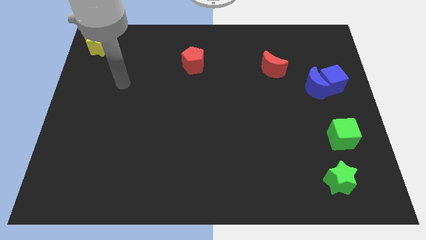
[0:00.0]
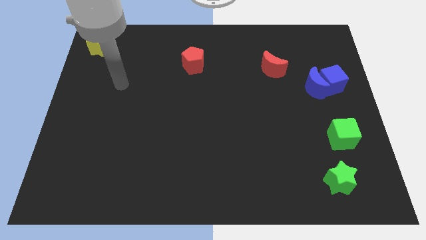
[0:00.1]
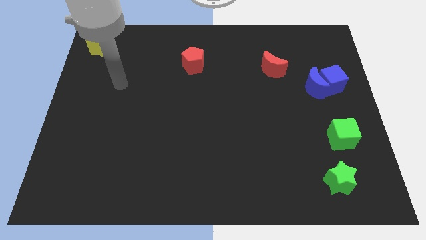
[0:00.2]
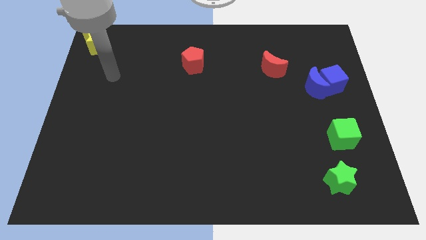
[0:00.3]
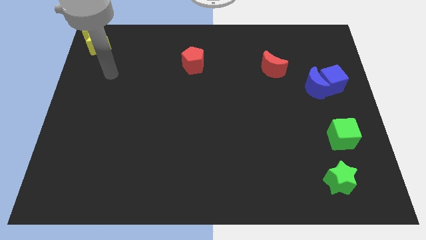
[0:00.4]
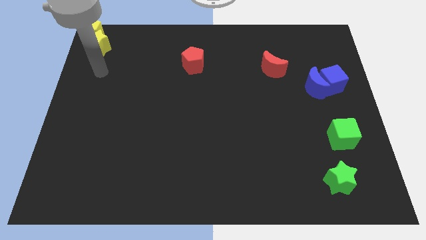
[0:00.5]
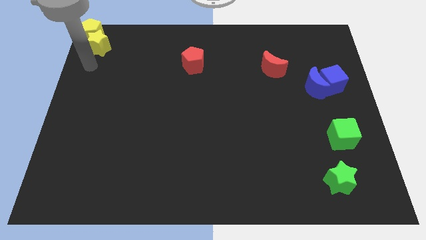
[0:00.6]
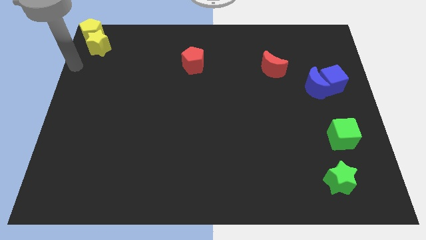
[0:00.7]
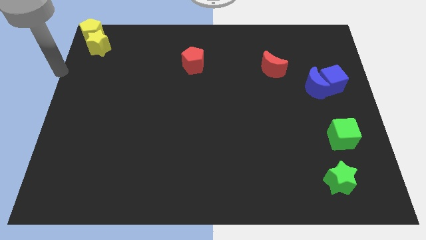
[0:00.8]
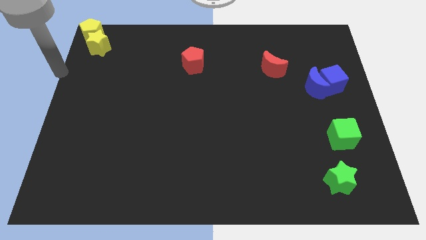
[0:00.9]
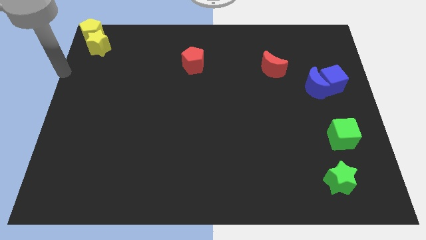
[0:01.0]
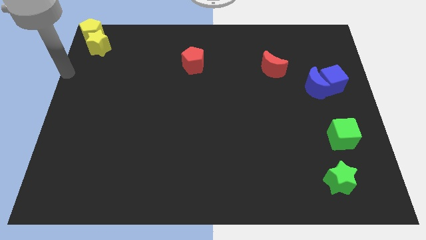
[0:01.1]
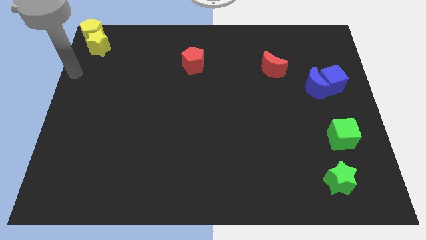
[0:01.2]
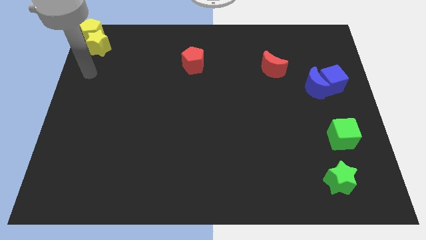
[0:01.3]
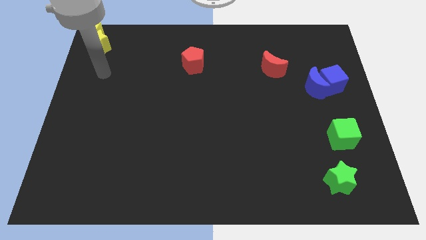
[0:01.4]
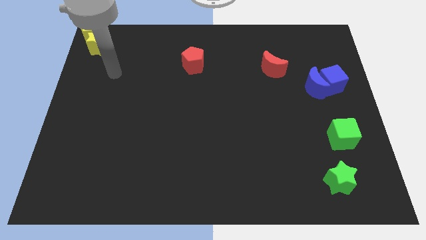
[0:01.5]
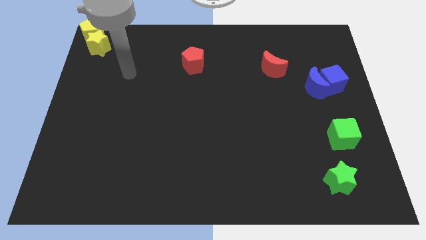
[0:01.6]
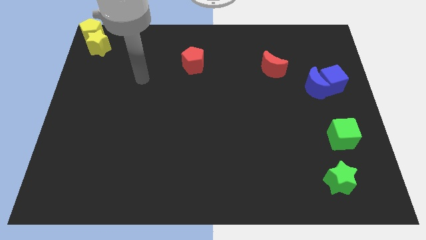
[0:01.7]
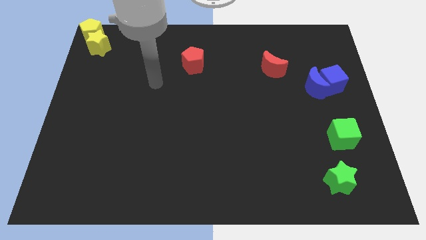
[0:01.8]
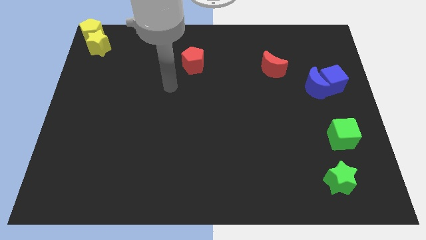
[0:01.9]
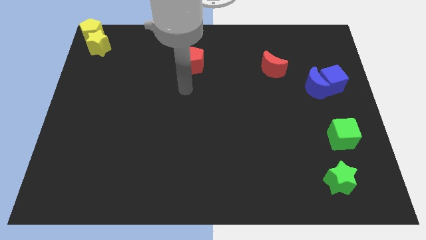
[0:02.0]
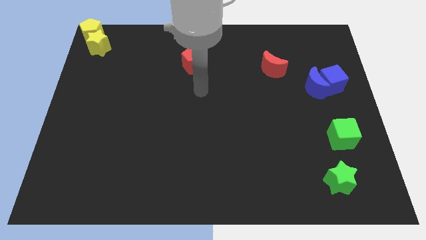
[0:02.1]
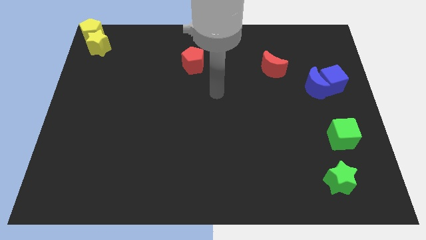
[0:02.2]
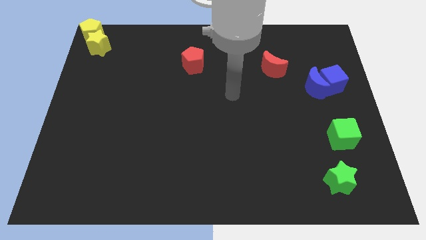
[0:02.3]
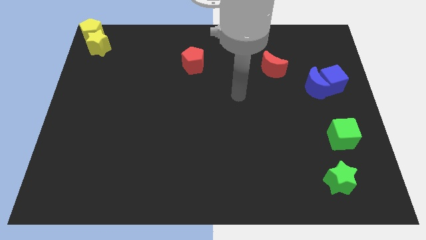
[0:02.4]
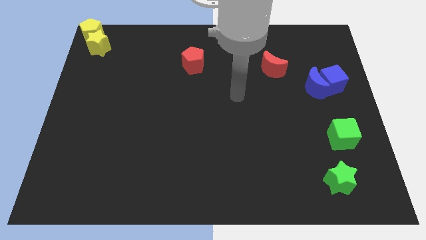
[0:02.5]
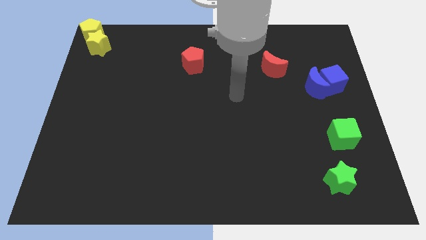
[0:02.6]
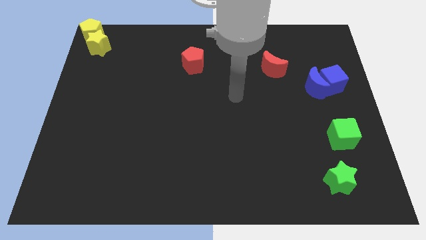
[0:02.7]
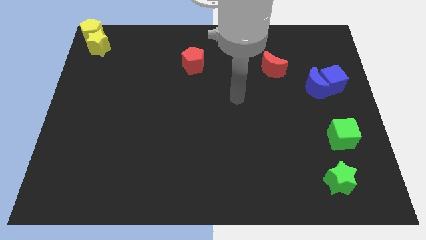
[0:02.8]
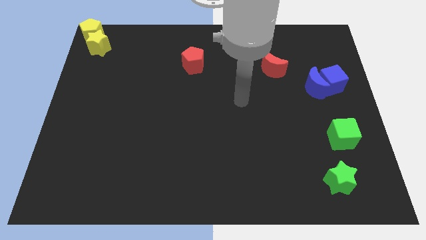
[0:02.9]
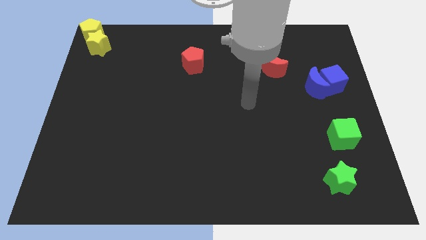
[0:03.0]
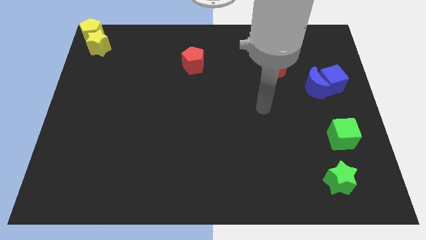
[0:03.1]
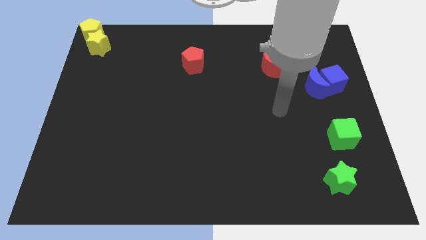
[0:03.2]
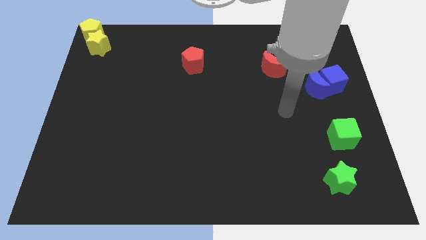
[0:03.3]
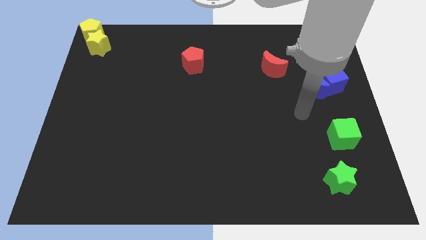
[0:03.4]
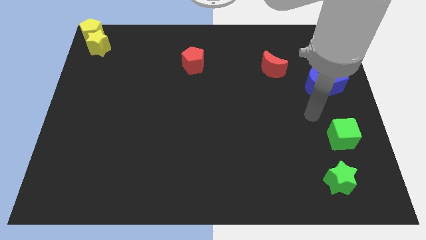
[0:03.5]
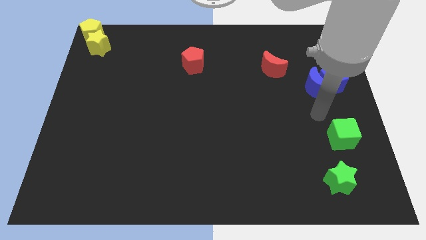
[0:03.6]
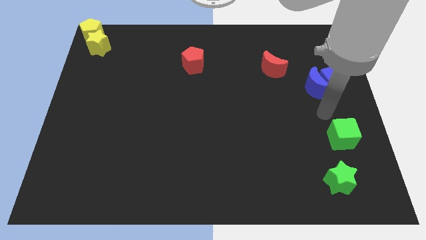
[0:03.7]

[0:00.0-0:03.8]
point your arm at the bottom of the blue crescent

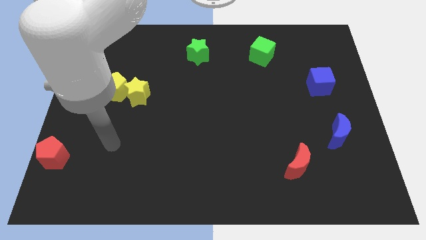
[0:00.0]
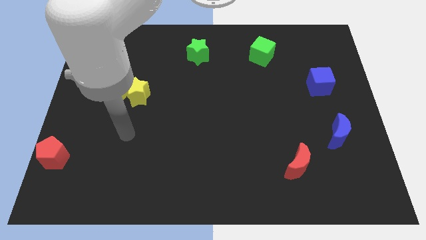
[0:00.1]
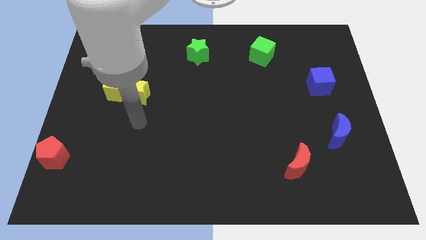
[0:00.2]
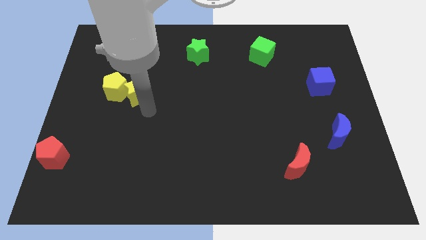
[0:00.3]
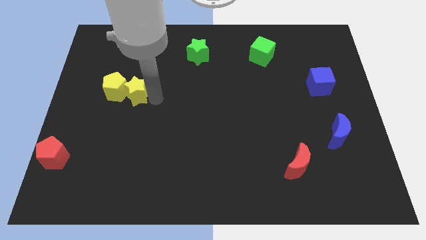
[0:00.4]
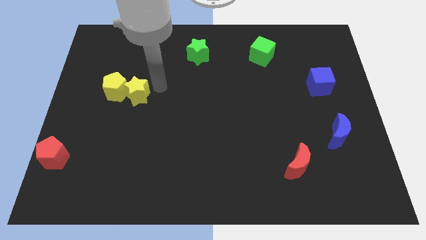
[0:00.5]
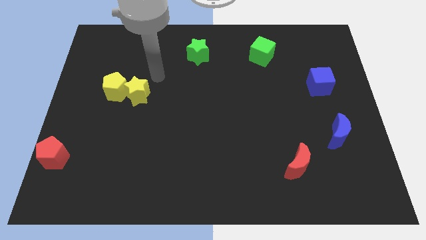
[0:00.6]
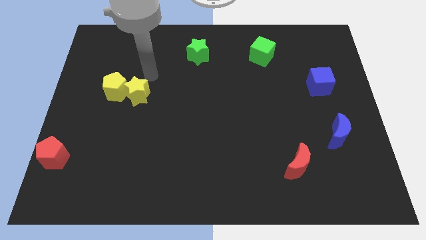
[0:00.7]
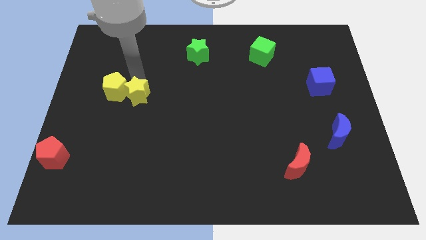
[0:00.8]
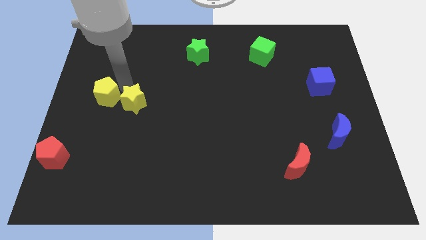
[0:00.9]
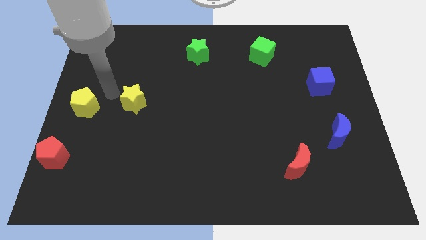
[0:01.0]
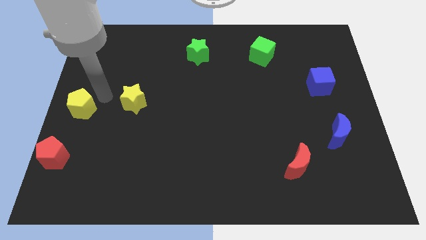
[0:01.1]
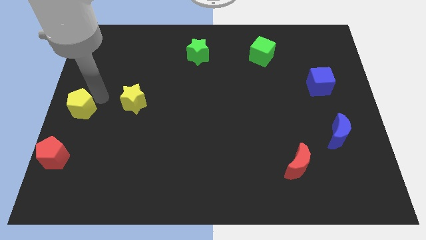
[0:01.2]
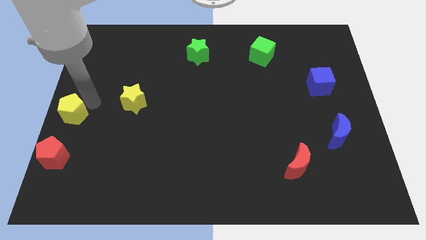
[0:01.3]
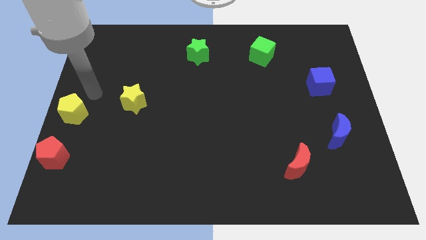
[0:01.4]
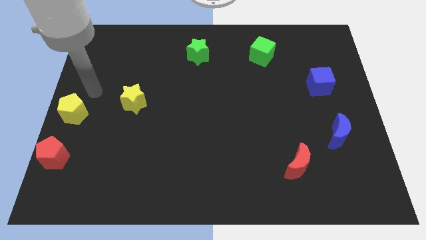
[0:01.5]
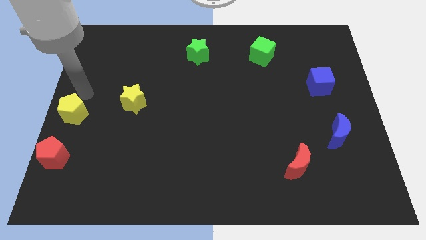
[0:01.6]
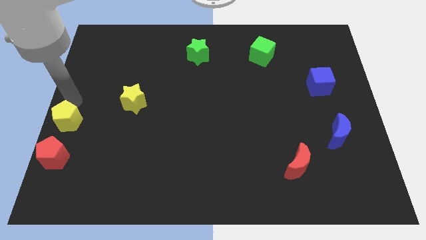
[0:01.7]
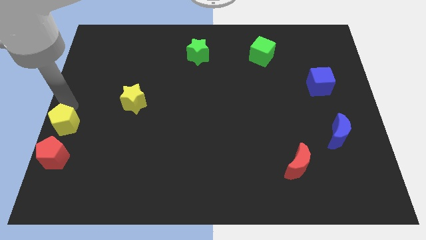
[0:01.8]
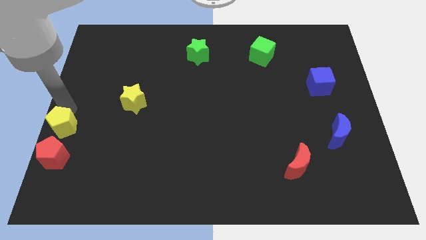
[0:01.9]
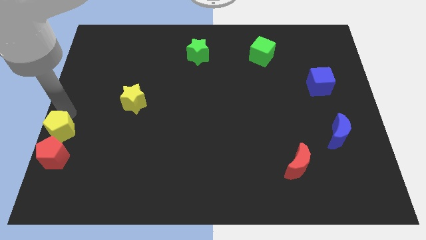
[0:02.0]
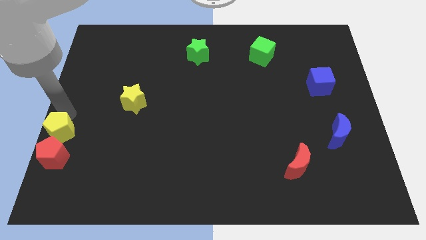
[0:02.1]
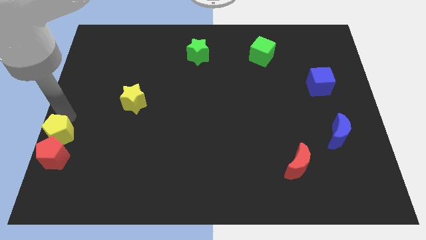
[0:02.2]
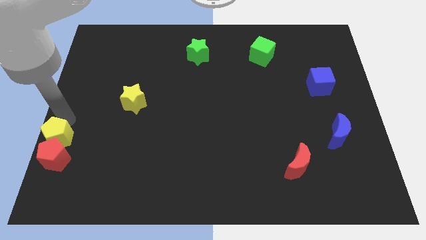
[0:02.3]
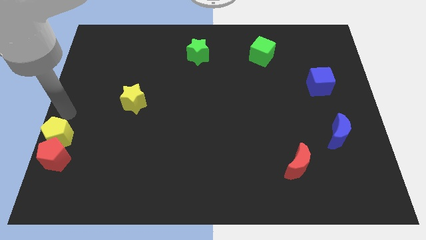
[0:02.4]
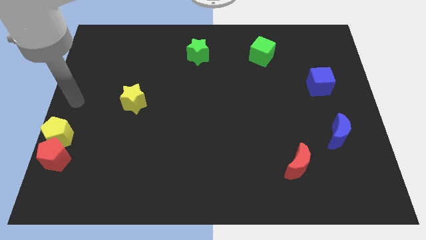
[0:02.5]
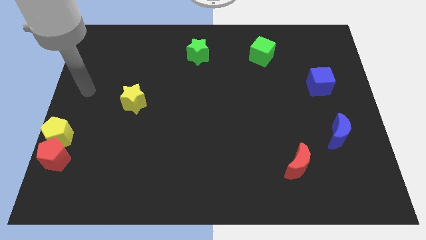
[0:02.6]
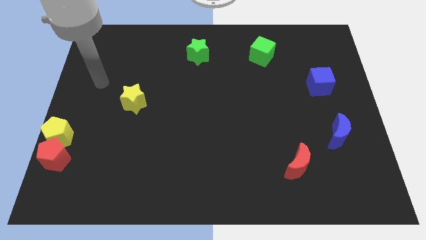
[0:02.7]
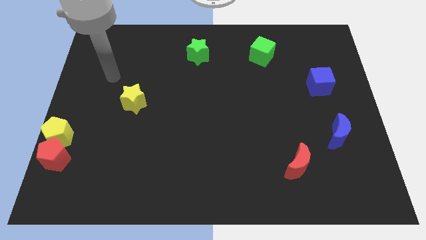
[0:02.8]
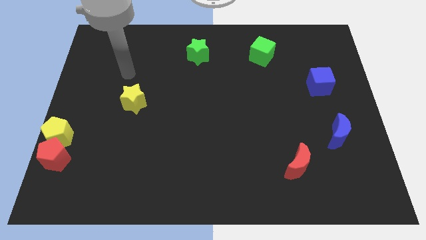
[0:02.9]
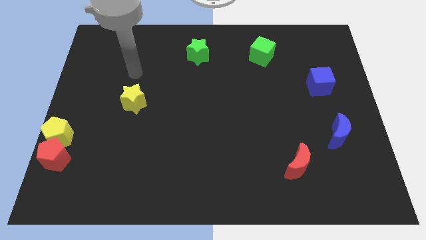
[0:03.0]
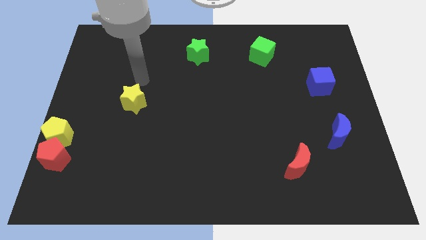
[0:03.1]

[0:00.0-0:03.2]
move the yellow pentagon to the top of red pentagon

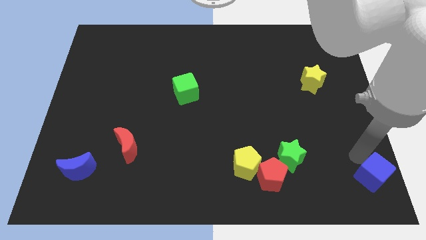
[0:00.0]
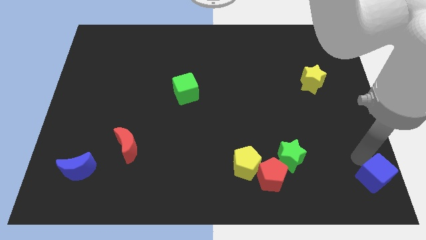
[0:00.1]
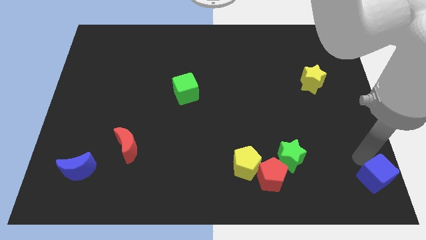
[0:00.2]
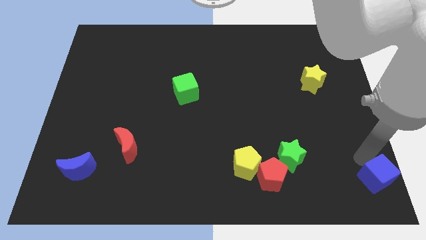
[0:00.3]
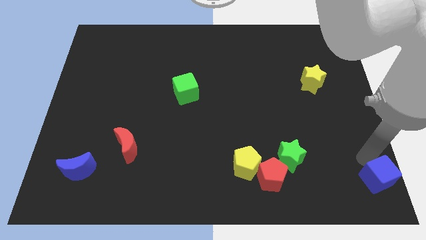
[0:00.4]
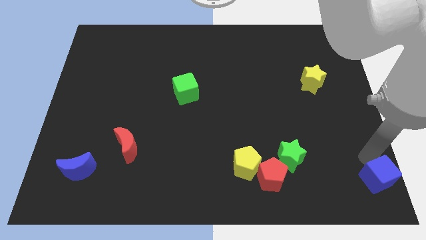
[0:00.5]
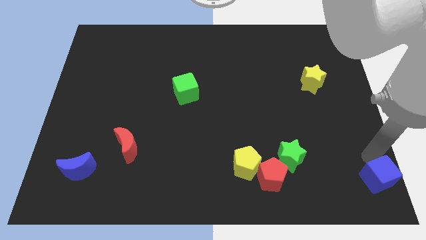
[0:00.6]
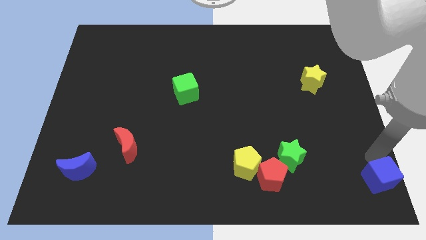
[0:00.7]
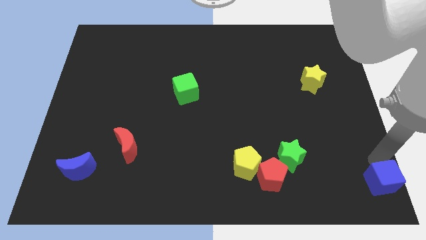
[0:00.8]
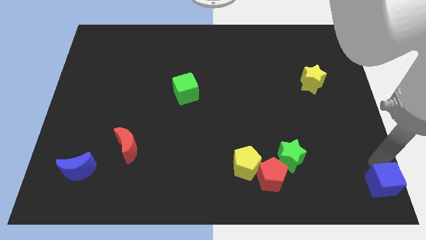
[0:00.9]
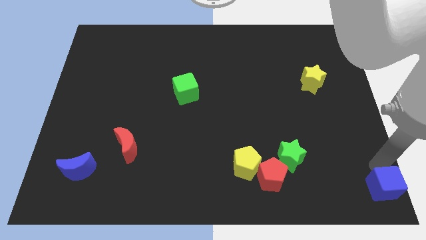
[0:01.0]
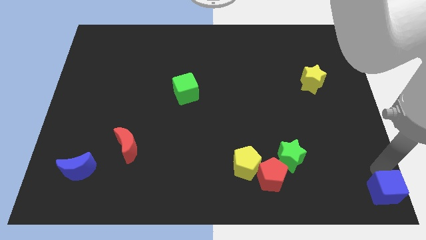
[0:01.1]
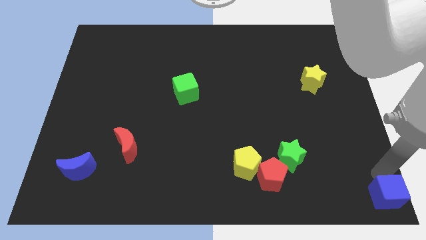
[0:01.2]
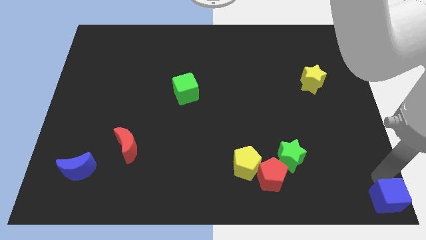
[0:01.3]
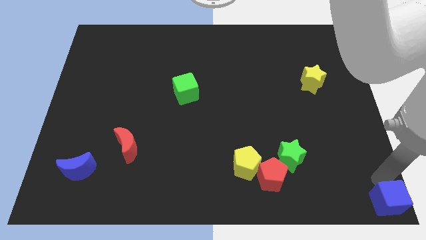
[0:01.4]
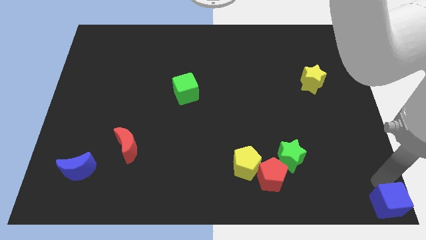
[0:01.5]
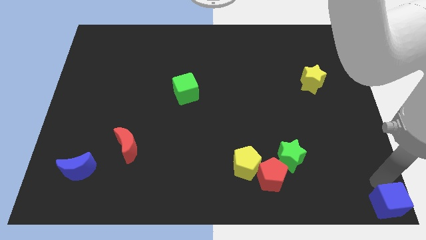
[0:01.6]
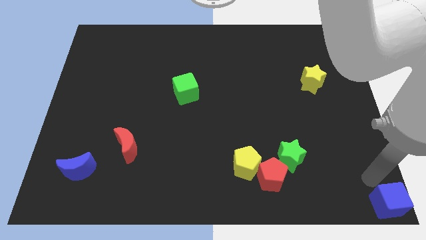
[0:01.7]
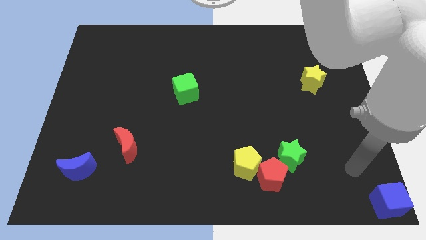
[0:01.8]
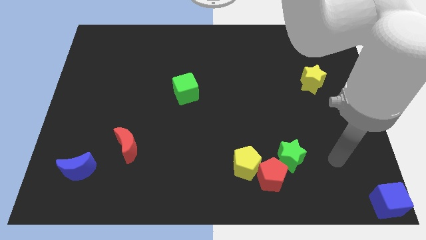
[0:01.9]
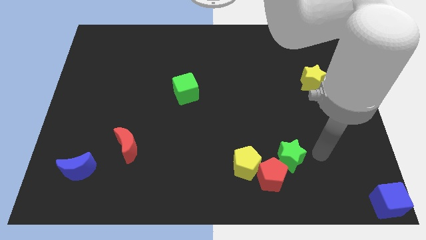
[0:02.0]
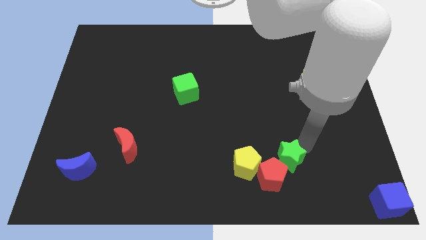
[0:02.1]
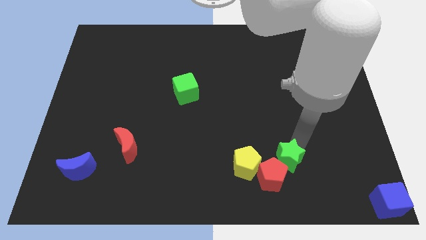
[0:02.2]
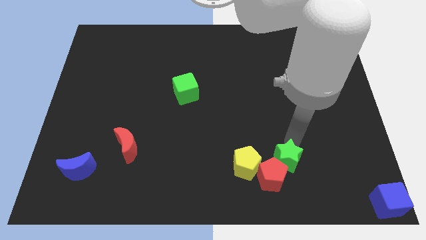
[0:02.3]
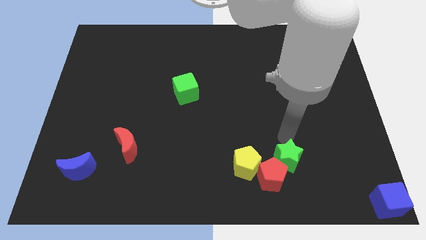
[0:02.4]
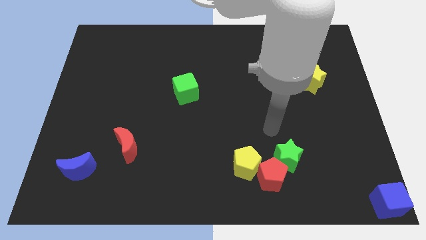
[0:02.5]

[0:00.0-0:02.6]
move blue cube to the bottom right corner
